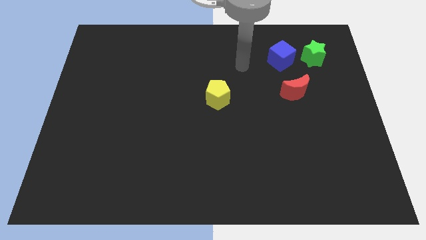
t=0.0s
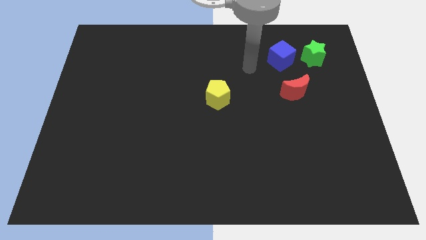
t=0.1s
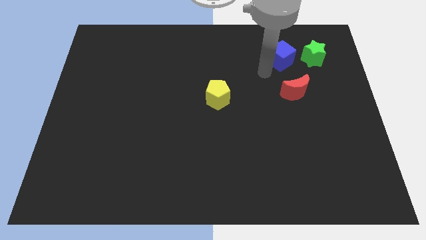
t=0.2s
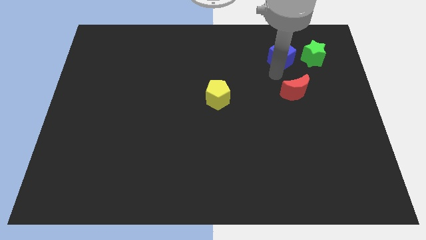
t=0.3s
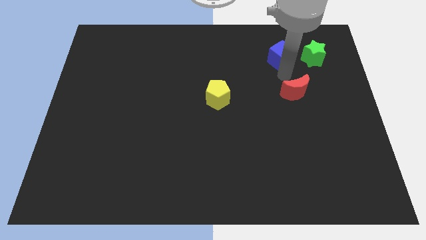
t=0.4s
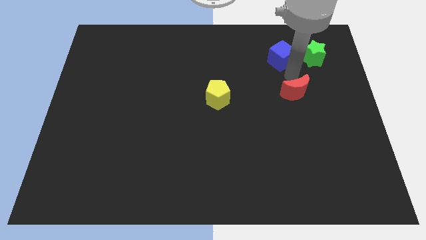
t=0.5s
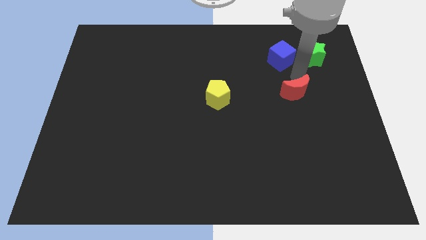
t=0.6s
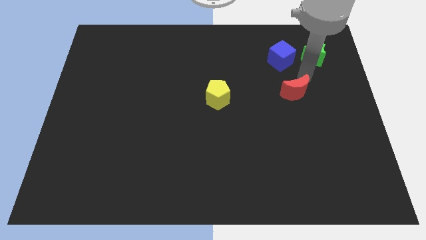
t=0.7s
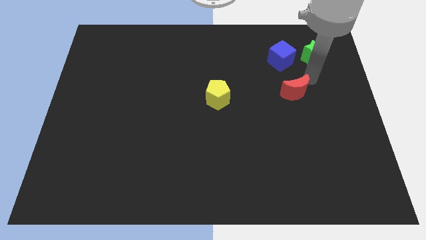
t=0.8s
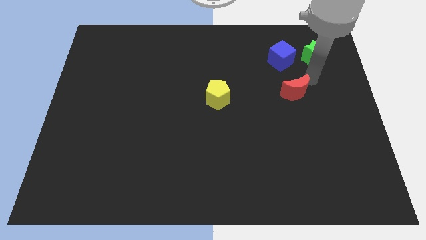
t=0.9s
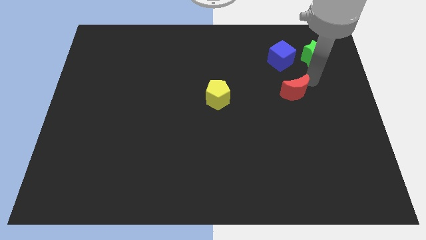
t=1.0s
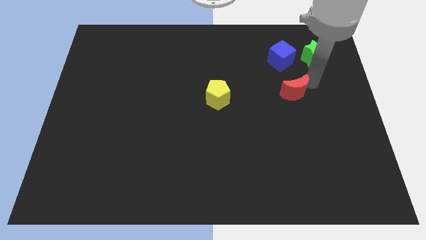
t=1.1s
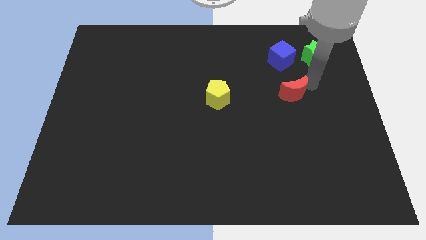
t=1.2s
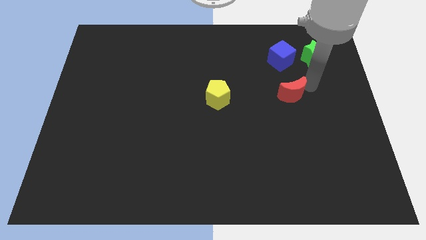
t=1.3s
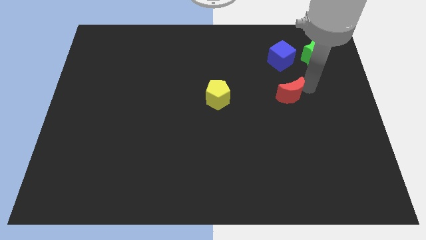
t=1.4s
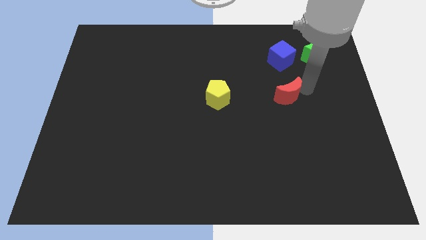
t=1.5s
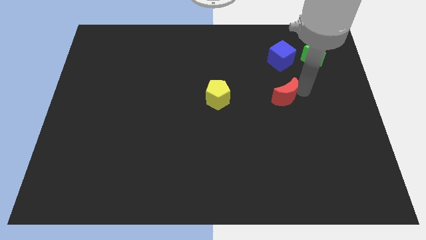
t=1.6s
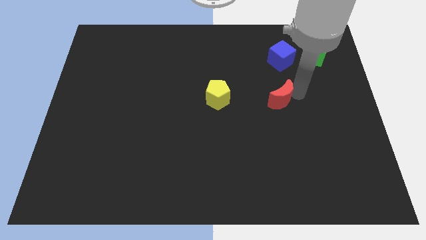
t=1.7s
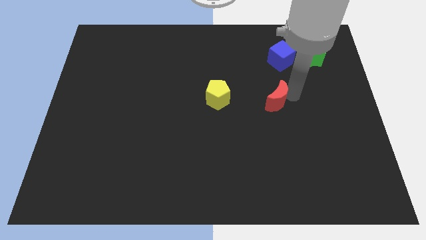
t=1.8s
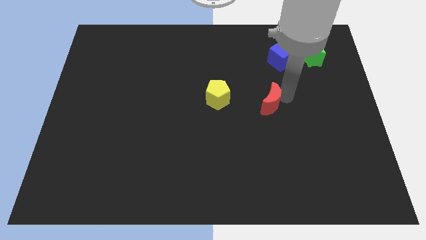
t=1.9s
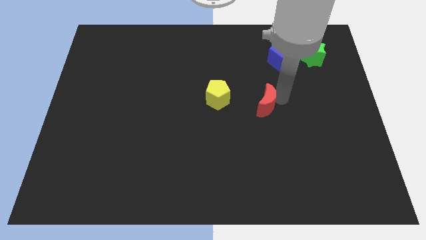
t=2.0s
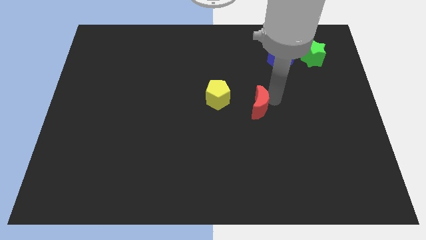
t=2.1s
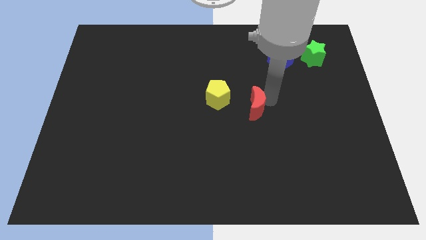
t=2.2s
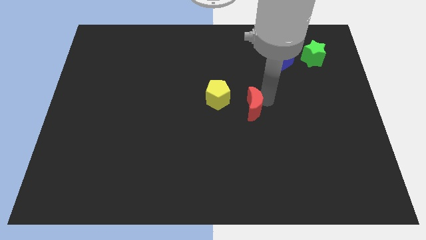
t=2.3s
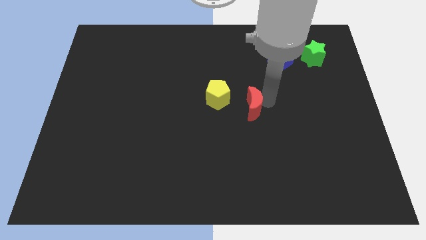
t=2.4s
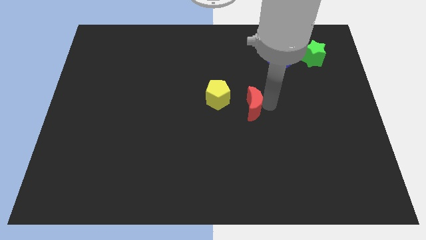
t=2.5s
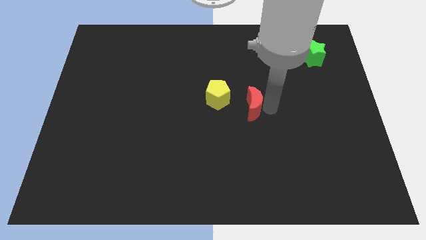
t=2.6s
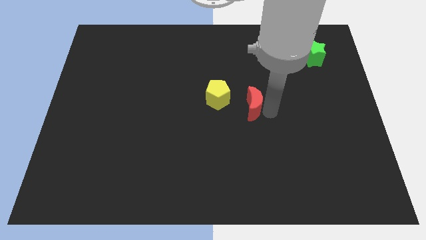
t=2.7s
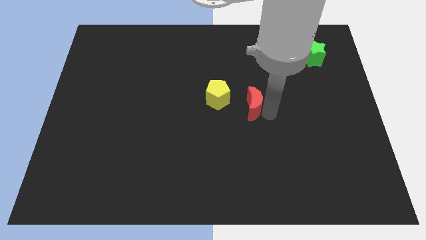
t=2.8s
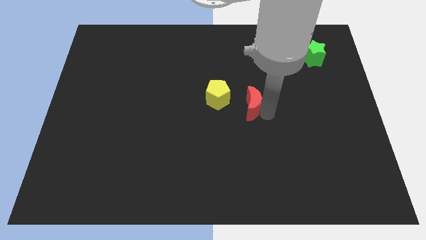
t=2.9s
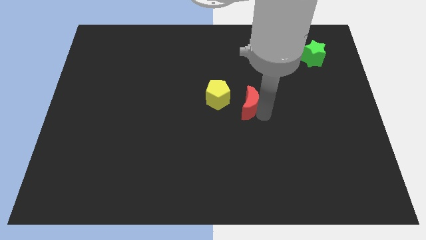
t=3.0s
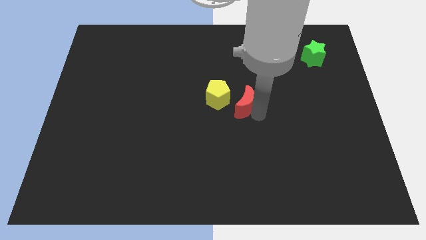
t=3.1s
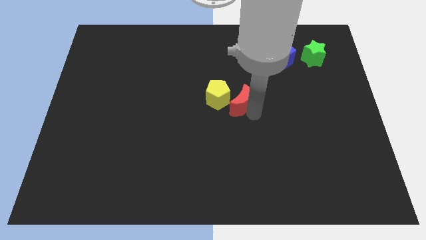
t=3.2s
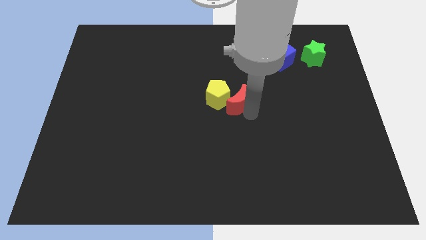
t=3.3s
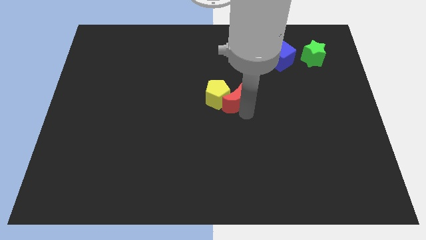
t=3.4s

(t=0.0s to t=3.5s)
slide the red block to the pentagon

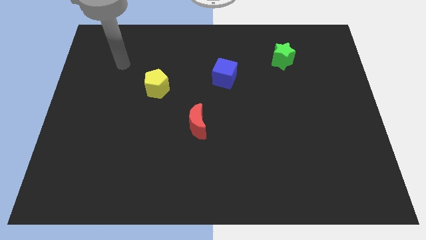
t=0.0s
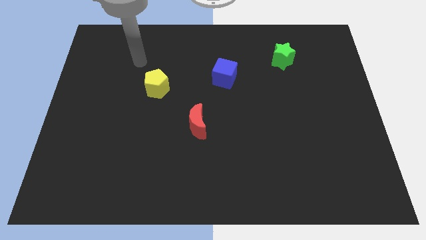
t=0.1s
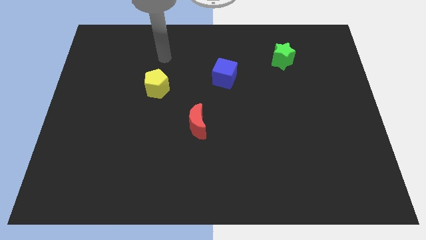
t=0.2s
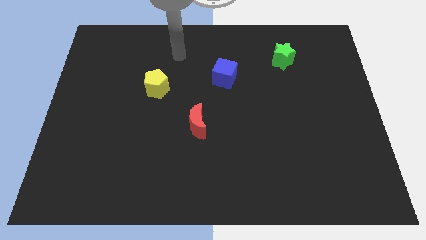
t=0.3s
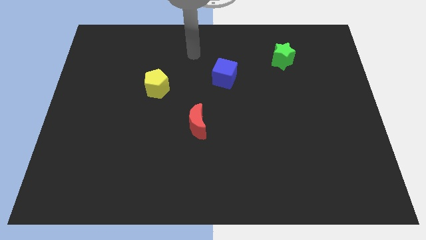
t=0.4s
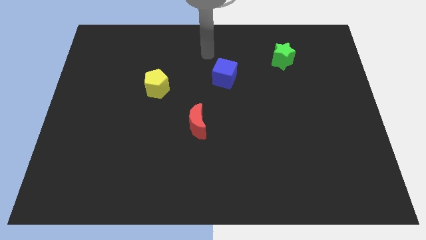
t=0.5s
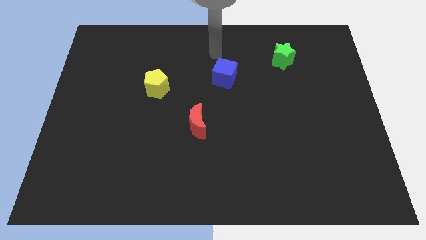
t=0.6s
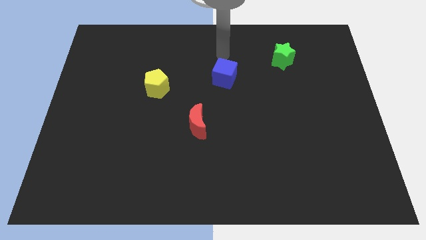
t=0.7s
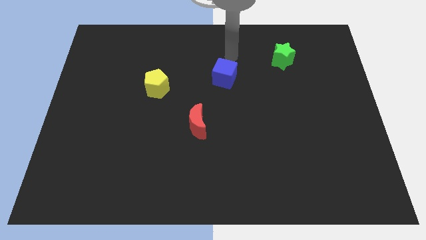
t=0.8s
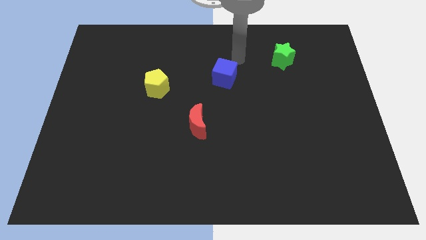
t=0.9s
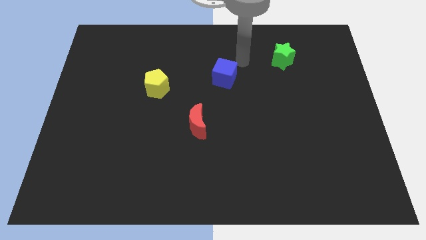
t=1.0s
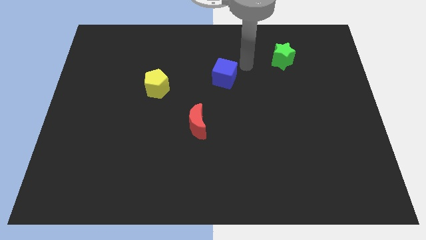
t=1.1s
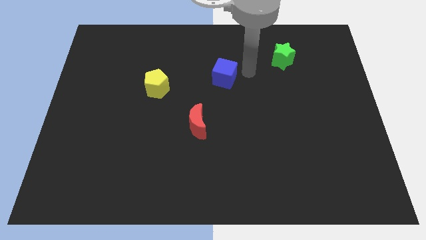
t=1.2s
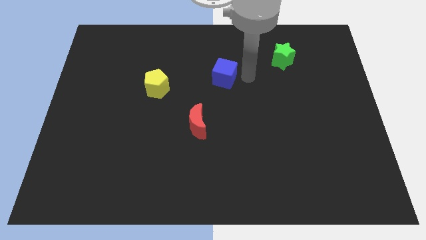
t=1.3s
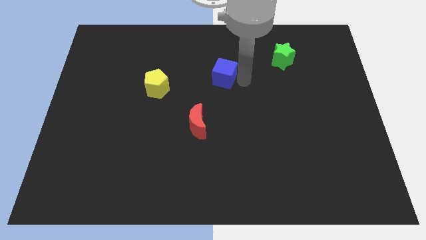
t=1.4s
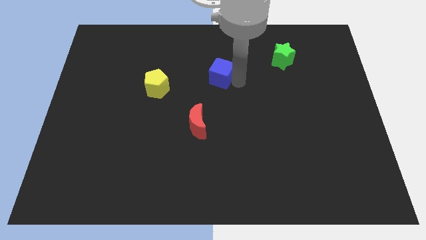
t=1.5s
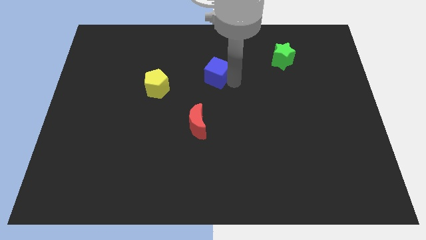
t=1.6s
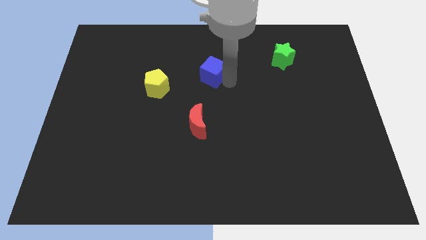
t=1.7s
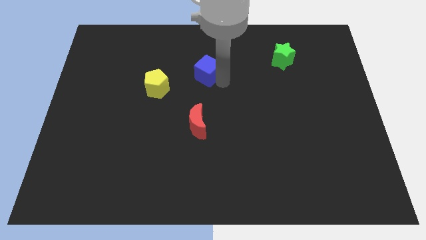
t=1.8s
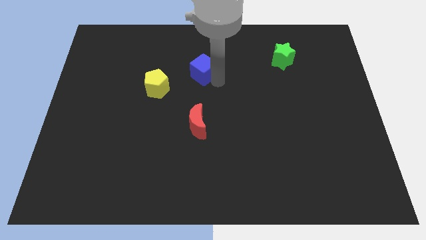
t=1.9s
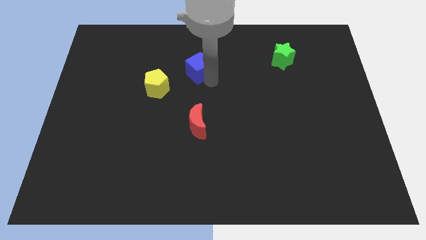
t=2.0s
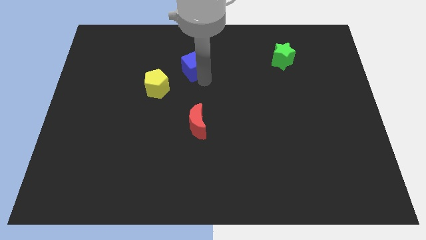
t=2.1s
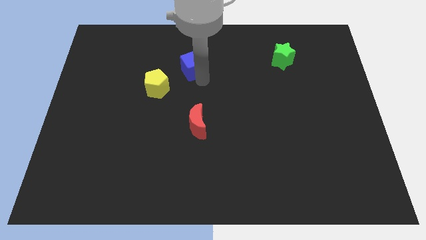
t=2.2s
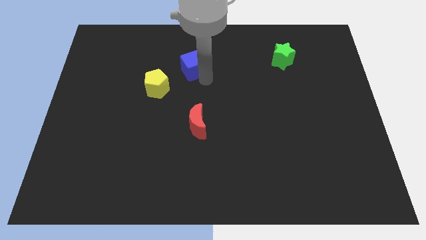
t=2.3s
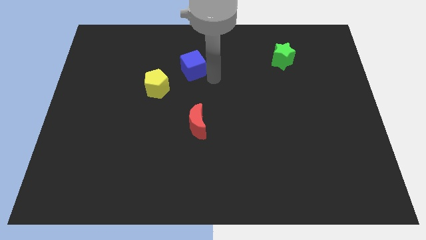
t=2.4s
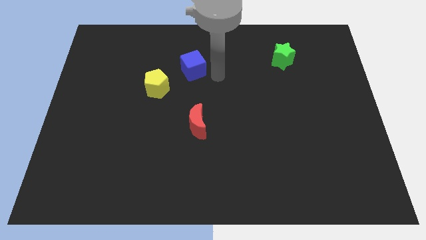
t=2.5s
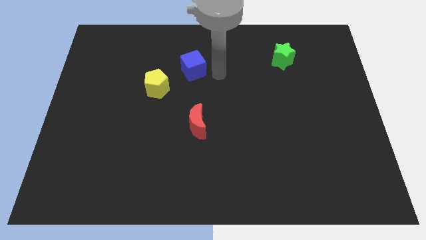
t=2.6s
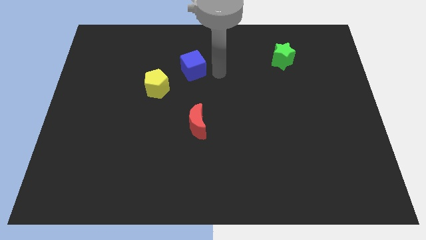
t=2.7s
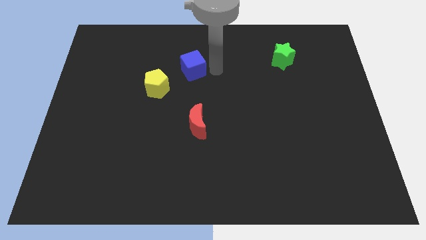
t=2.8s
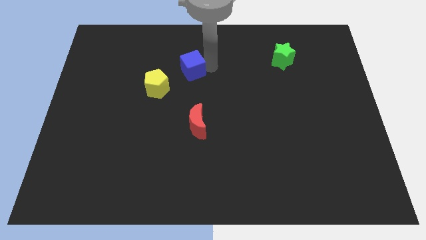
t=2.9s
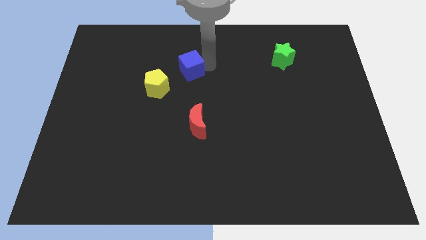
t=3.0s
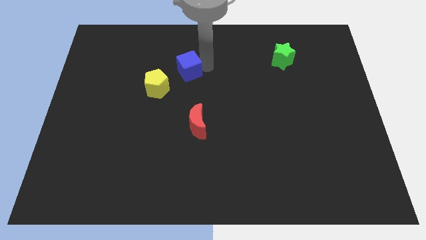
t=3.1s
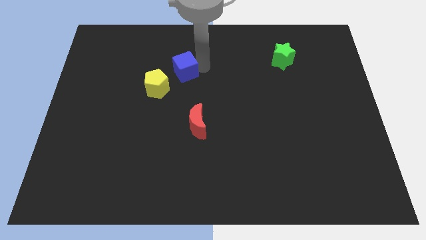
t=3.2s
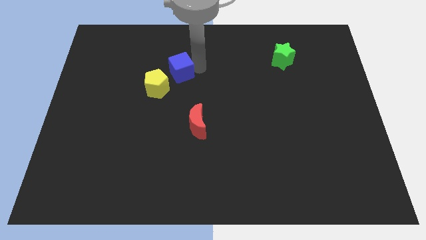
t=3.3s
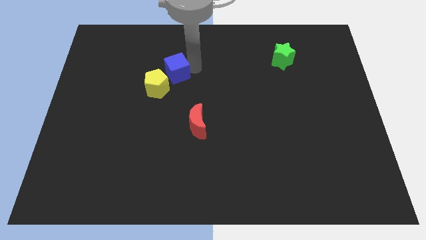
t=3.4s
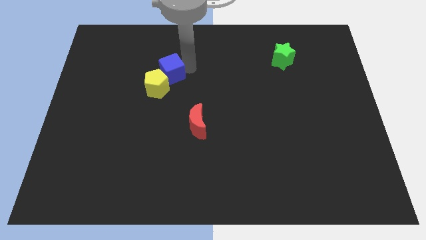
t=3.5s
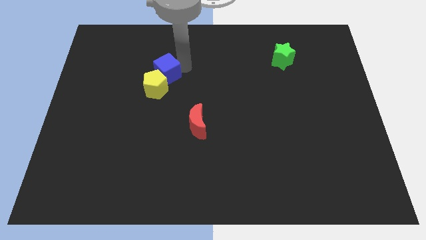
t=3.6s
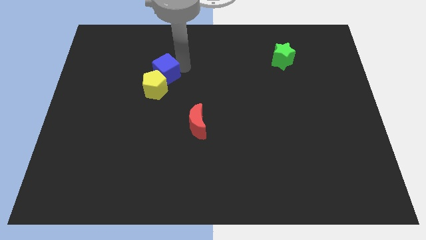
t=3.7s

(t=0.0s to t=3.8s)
slide the blue block towards the yellow block

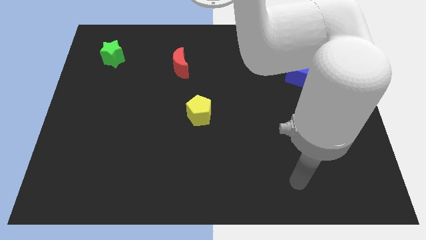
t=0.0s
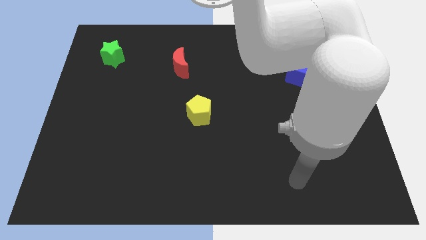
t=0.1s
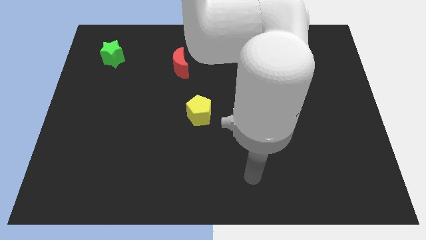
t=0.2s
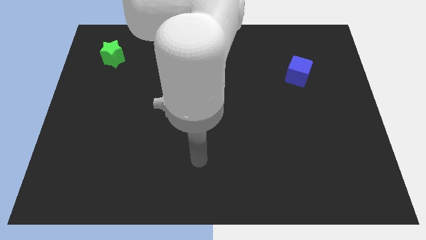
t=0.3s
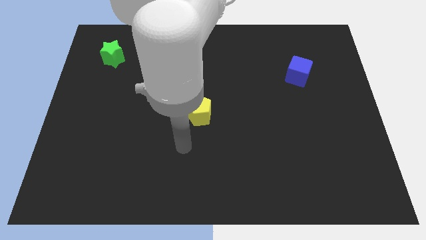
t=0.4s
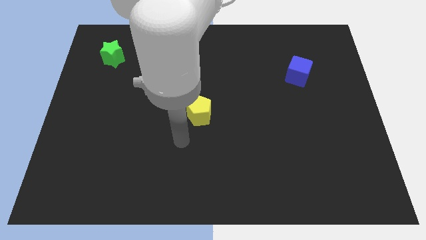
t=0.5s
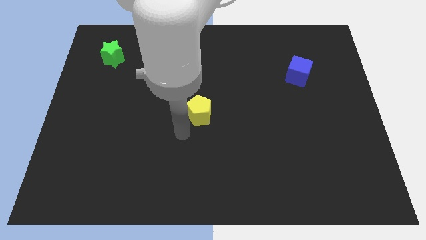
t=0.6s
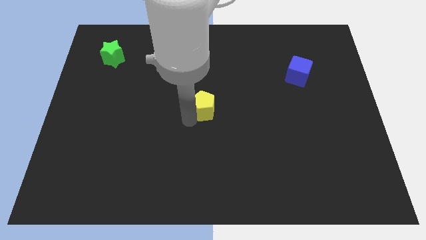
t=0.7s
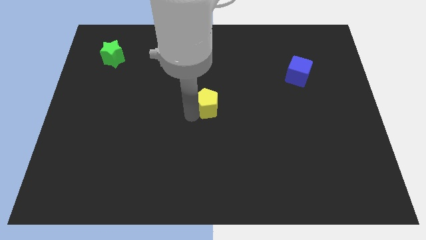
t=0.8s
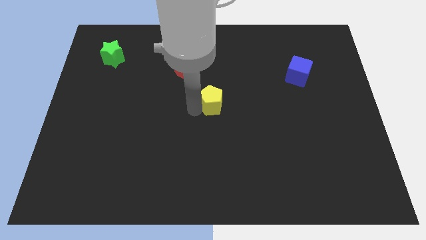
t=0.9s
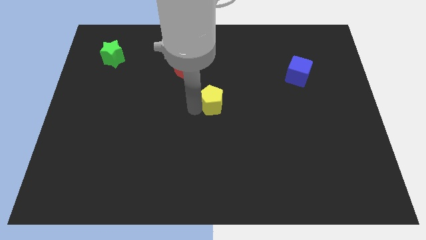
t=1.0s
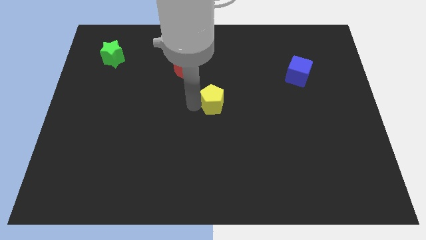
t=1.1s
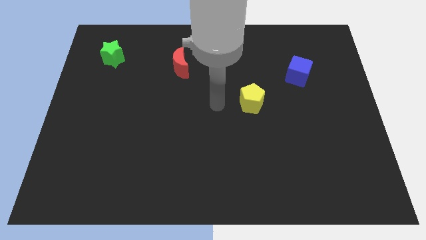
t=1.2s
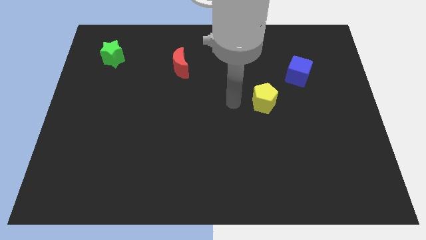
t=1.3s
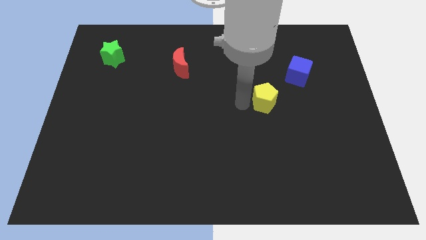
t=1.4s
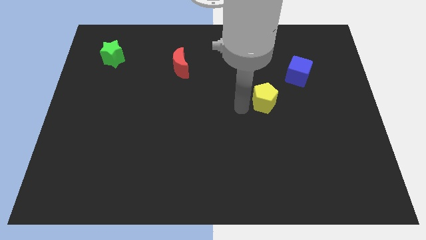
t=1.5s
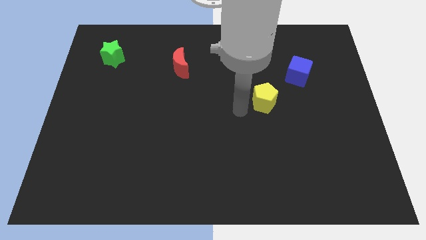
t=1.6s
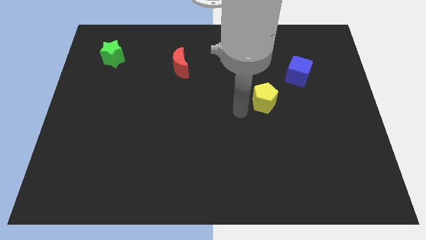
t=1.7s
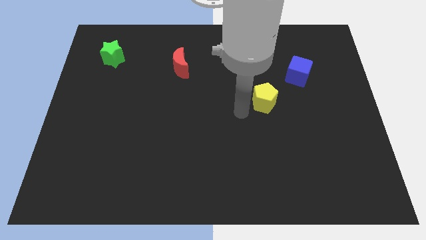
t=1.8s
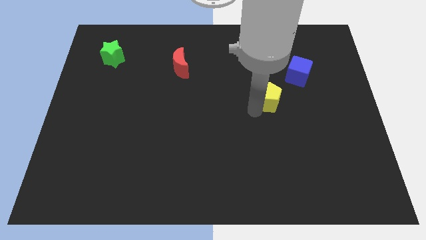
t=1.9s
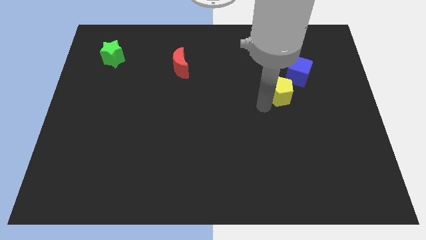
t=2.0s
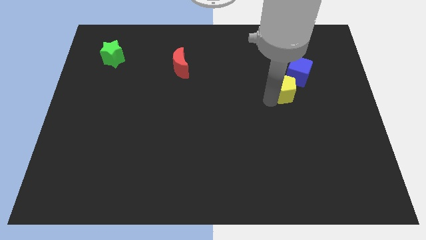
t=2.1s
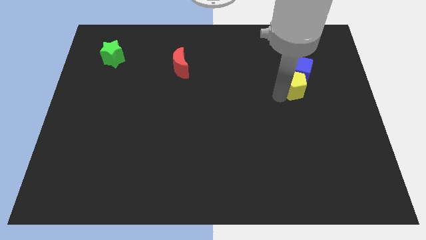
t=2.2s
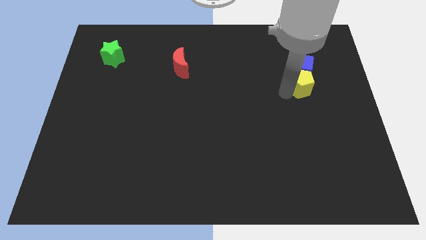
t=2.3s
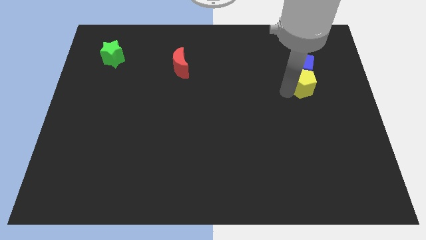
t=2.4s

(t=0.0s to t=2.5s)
put the pentagon next to the blue block
